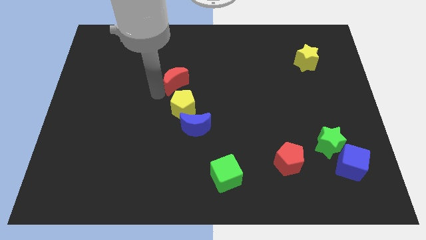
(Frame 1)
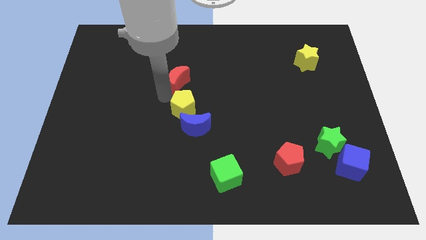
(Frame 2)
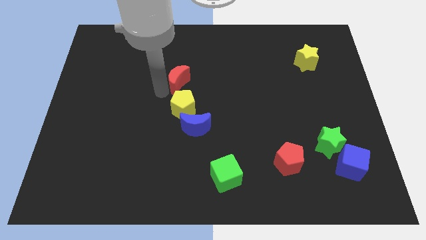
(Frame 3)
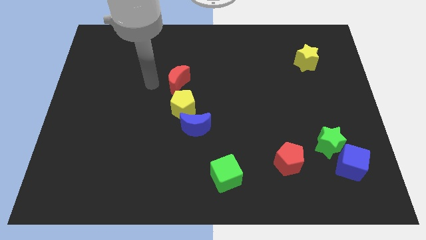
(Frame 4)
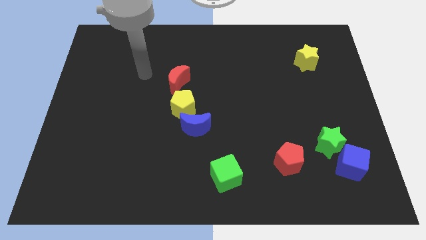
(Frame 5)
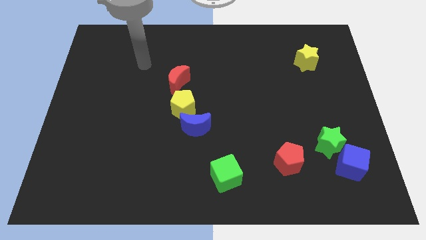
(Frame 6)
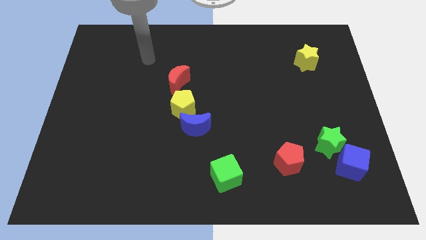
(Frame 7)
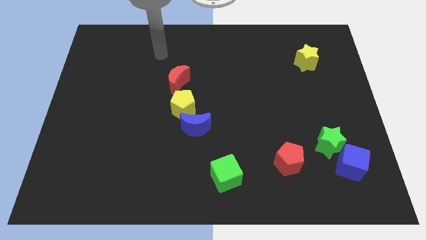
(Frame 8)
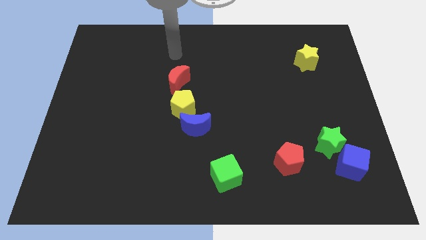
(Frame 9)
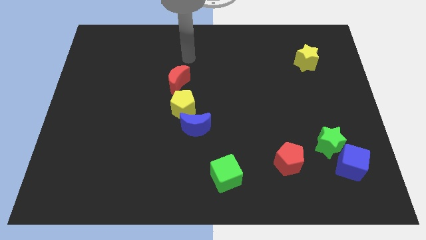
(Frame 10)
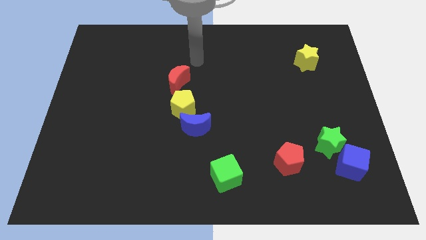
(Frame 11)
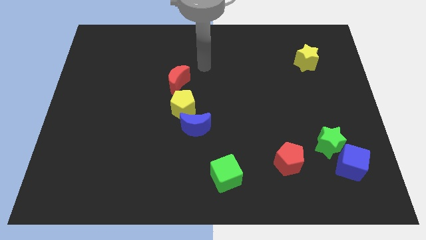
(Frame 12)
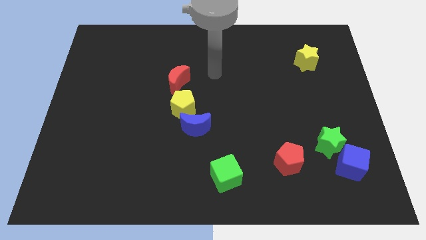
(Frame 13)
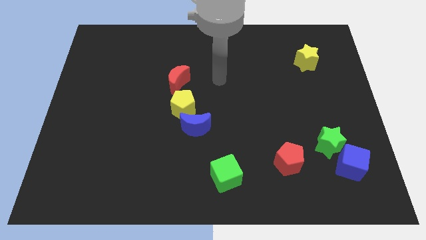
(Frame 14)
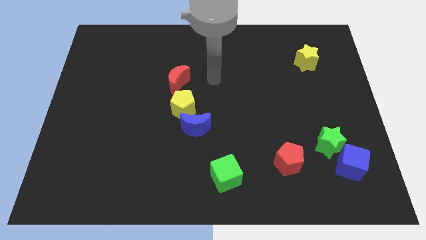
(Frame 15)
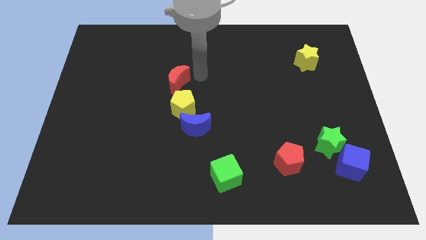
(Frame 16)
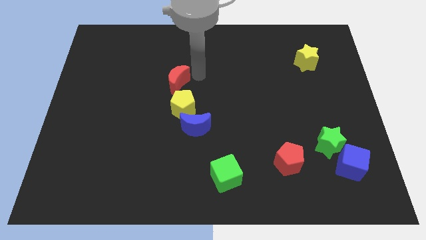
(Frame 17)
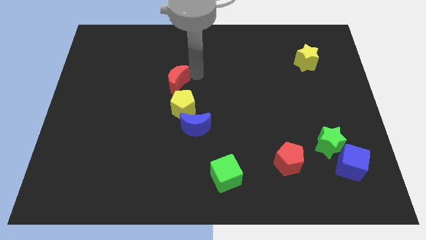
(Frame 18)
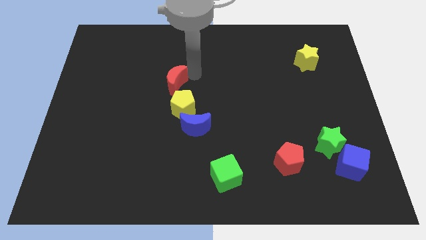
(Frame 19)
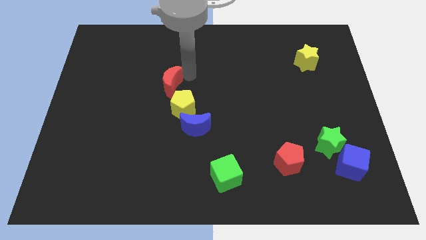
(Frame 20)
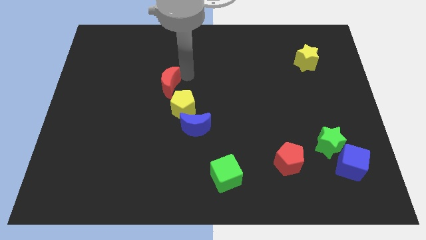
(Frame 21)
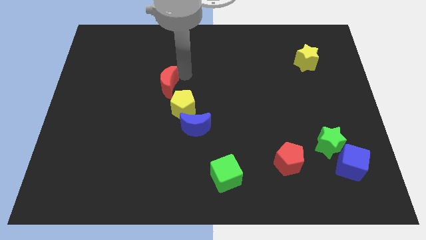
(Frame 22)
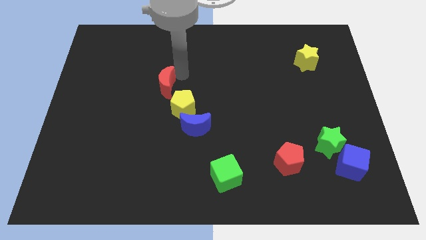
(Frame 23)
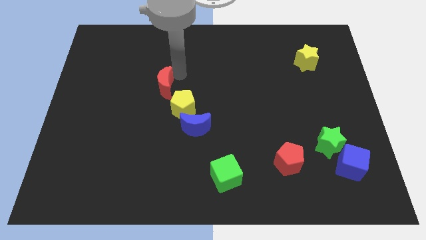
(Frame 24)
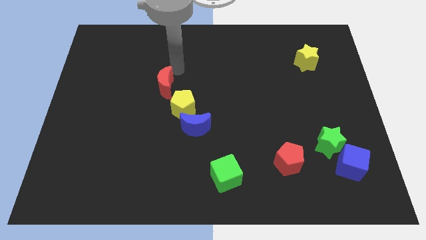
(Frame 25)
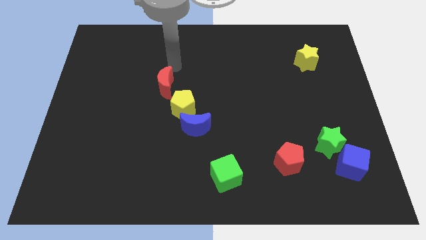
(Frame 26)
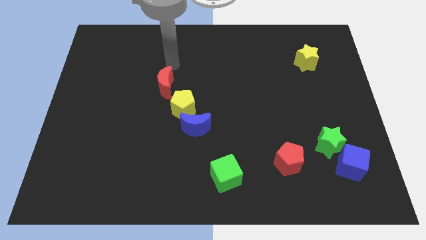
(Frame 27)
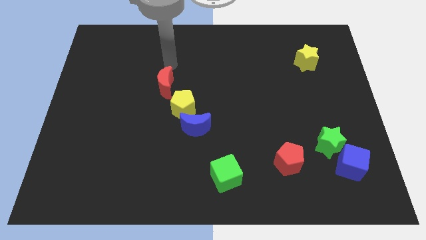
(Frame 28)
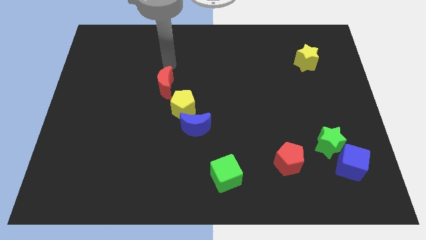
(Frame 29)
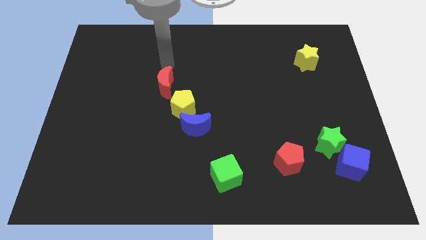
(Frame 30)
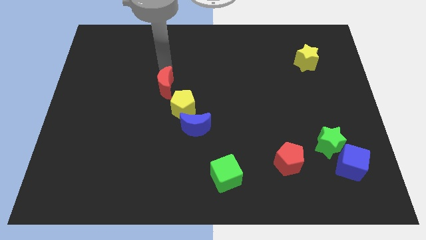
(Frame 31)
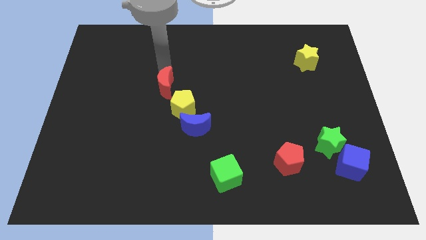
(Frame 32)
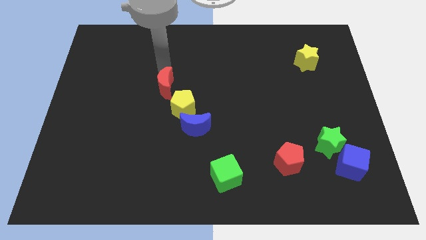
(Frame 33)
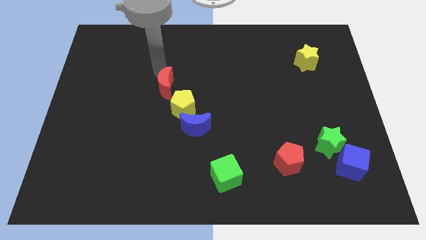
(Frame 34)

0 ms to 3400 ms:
drag red moon towards left a bit

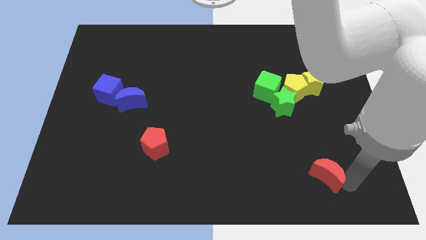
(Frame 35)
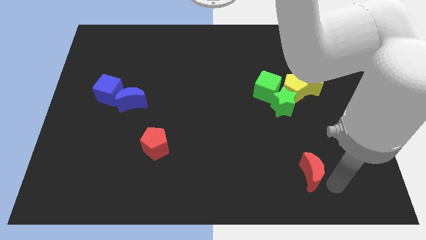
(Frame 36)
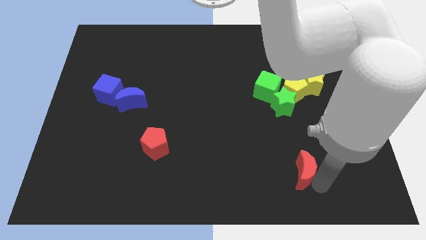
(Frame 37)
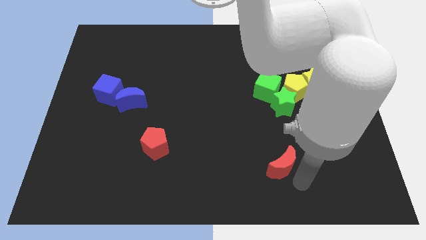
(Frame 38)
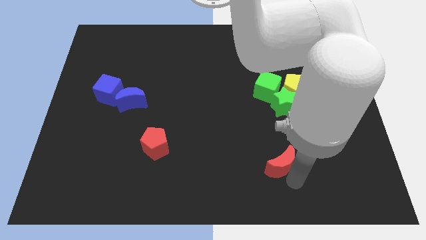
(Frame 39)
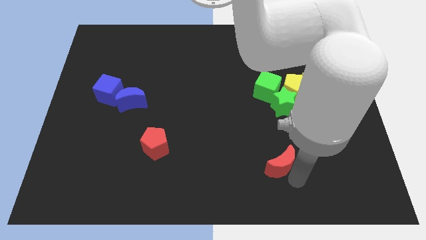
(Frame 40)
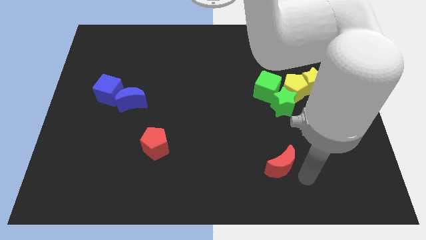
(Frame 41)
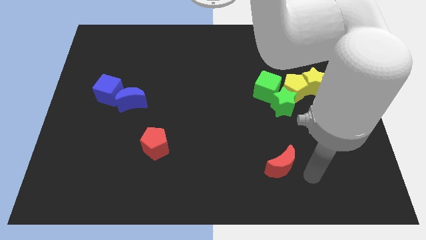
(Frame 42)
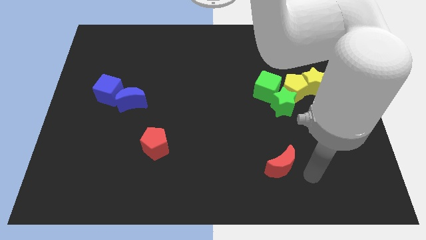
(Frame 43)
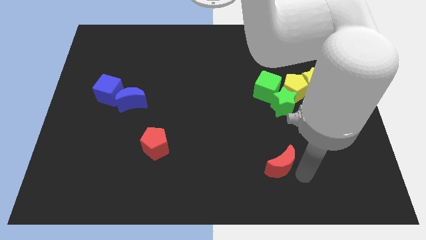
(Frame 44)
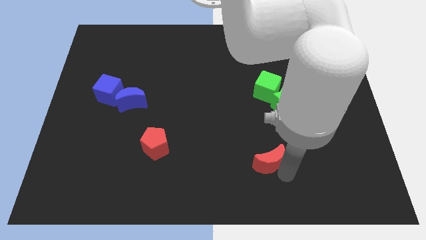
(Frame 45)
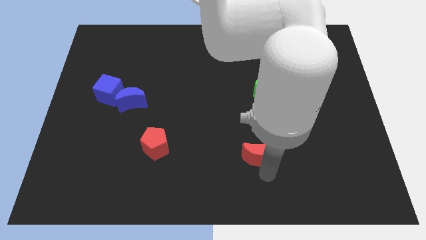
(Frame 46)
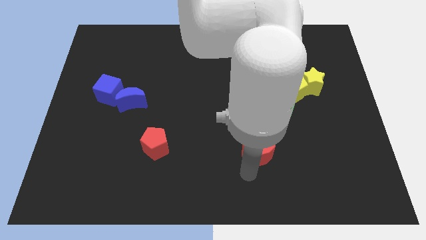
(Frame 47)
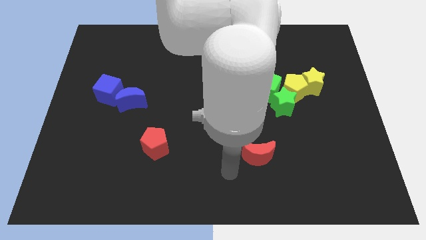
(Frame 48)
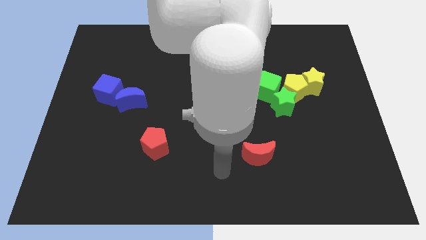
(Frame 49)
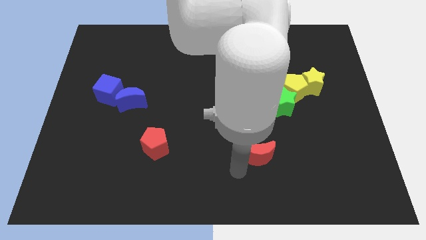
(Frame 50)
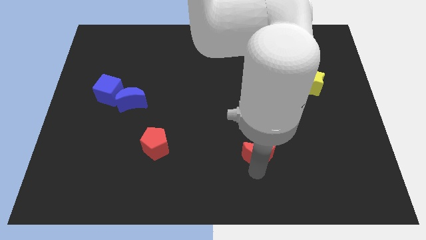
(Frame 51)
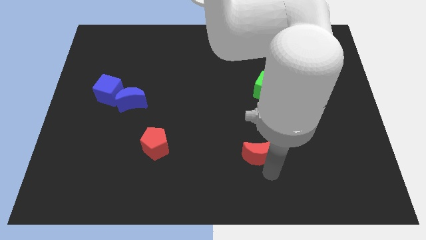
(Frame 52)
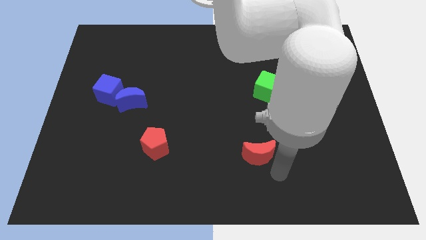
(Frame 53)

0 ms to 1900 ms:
move the red crescent horizontally right to the red pentagon

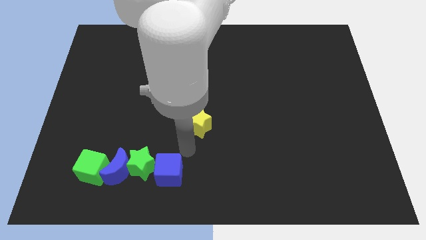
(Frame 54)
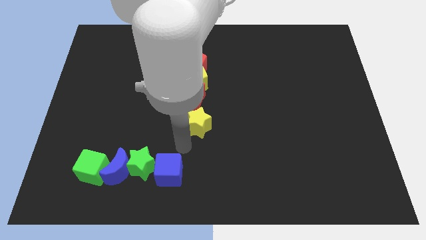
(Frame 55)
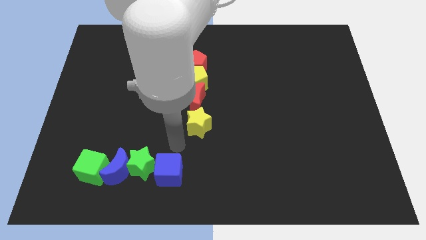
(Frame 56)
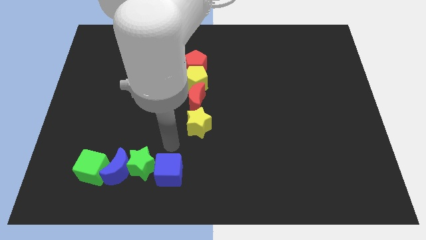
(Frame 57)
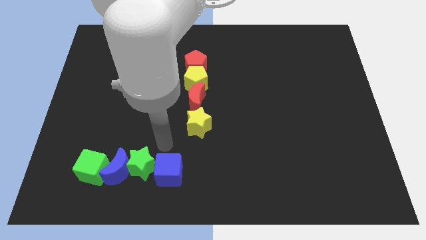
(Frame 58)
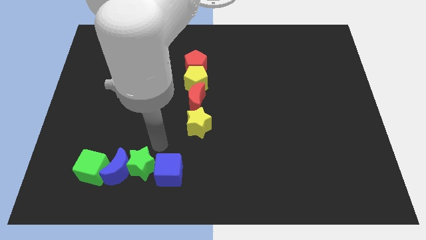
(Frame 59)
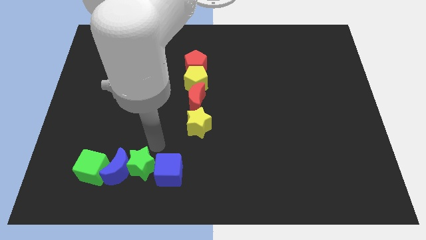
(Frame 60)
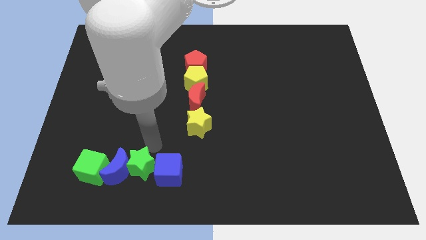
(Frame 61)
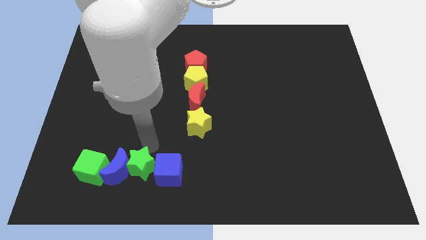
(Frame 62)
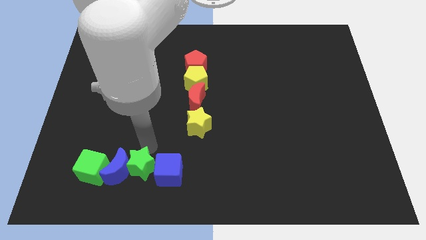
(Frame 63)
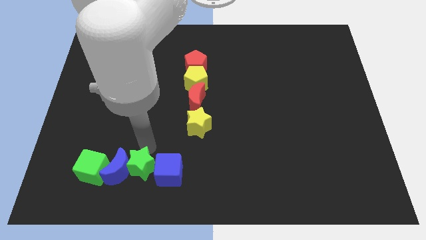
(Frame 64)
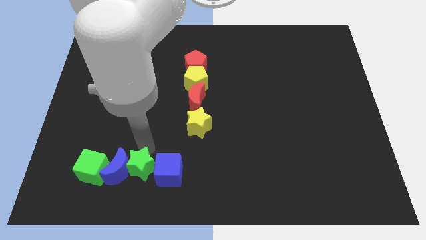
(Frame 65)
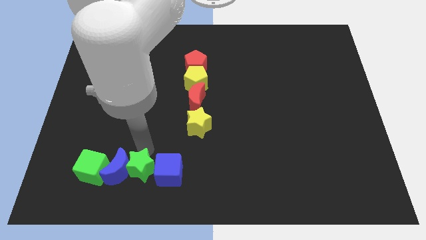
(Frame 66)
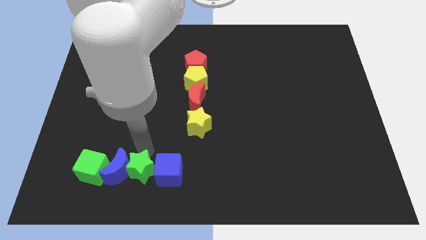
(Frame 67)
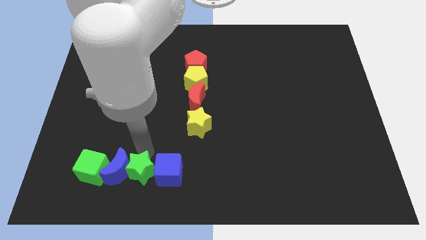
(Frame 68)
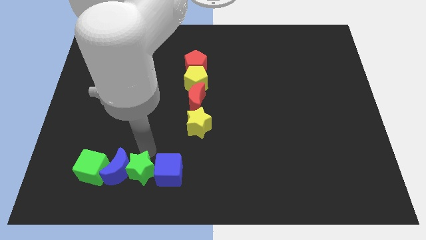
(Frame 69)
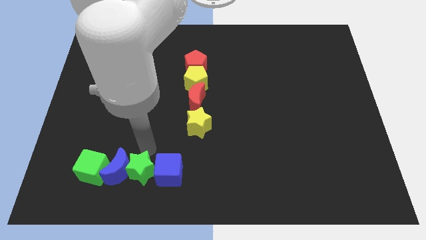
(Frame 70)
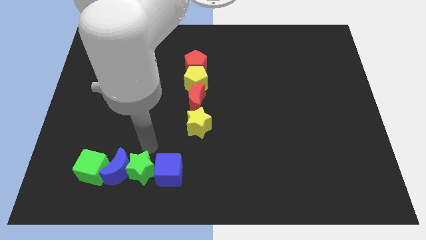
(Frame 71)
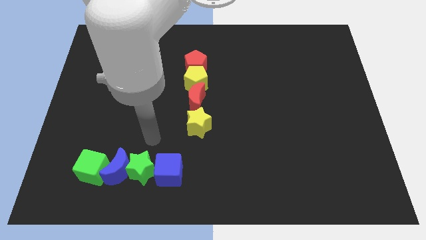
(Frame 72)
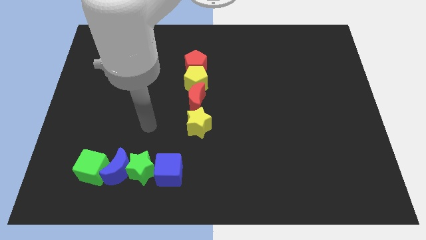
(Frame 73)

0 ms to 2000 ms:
adjust the blue and green star to form a horizontal

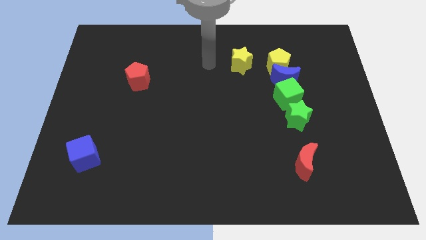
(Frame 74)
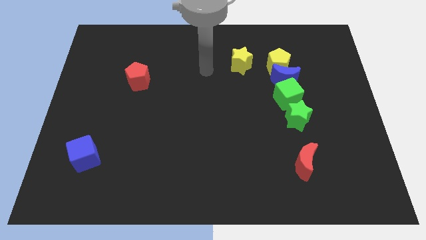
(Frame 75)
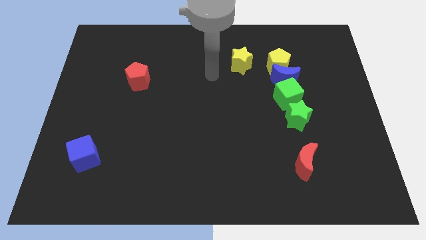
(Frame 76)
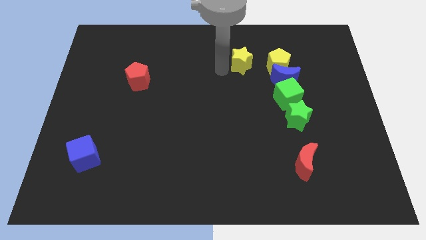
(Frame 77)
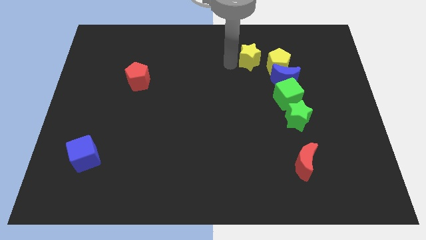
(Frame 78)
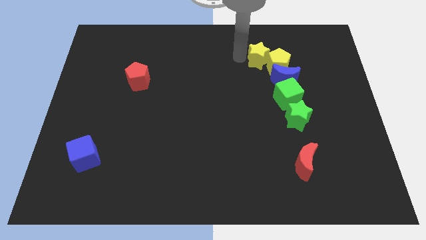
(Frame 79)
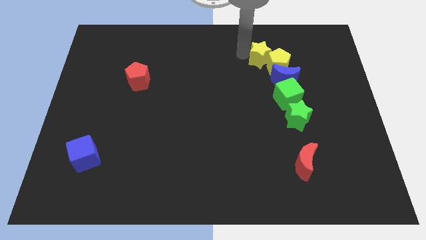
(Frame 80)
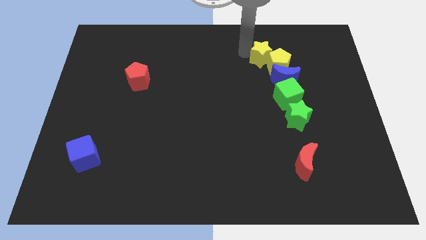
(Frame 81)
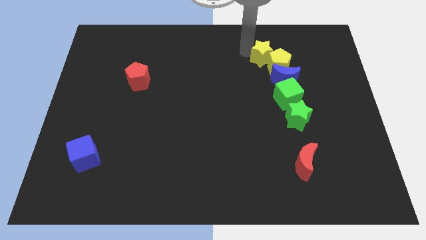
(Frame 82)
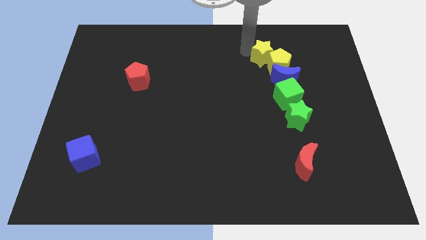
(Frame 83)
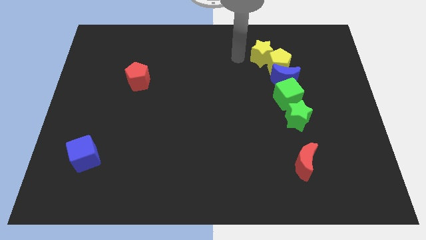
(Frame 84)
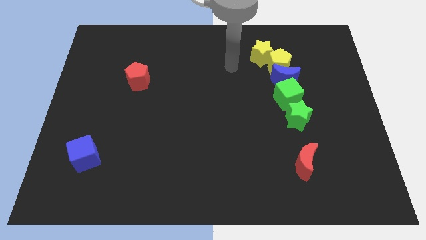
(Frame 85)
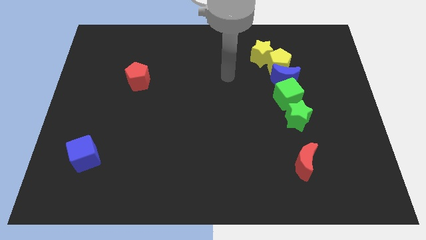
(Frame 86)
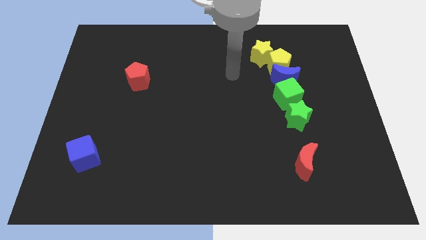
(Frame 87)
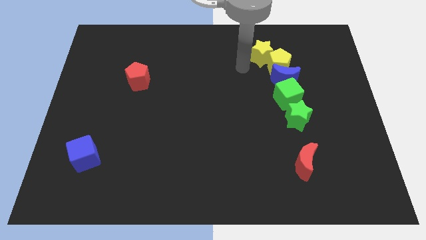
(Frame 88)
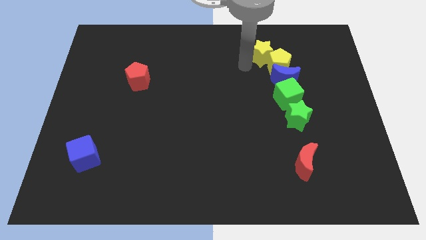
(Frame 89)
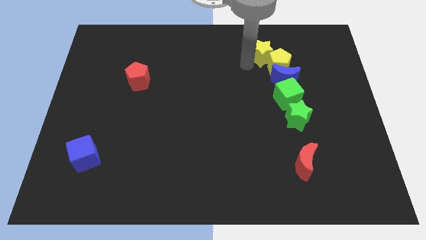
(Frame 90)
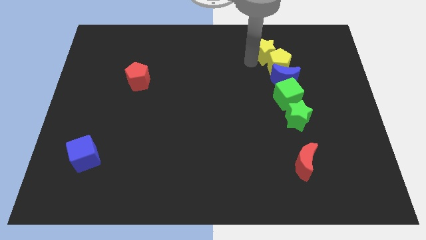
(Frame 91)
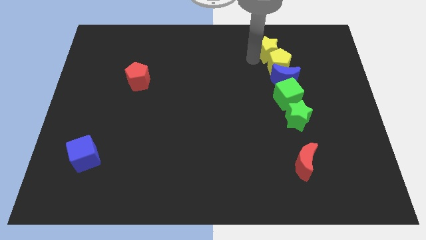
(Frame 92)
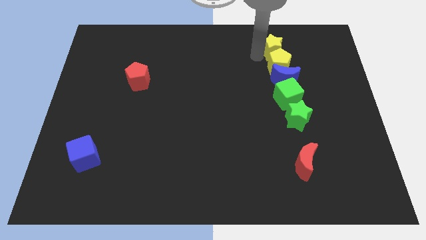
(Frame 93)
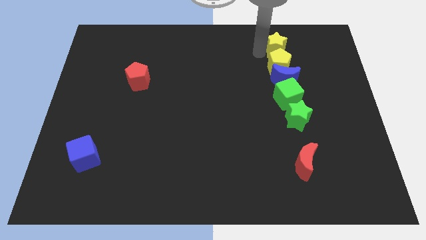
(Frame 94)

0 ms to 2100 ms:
place the yellow star above the yellow pentagon
